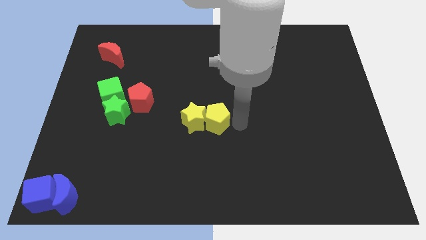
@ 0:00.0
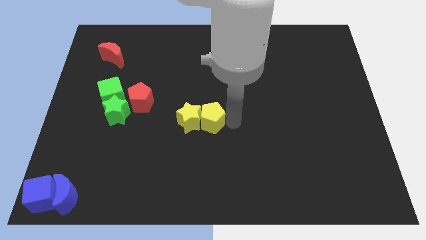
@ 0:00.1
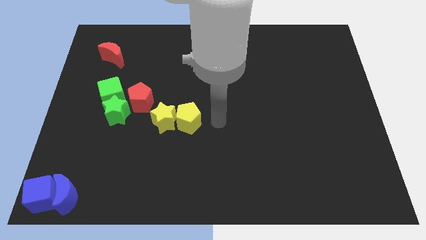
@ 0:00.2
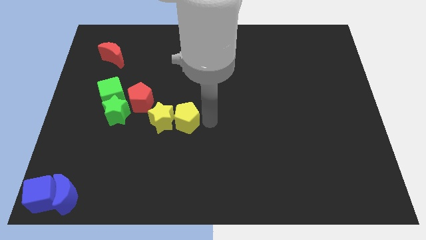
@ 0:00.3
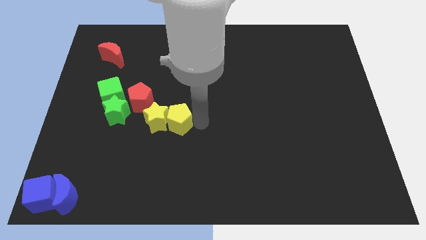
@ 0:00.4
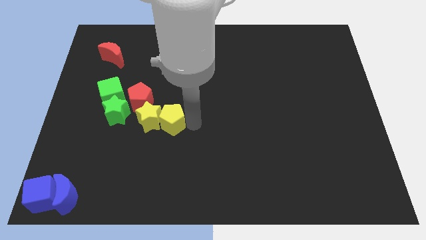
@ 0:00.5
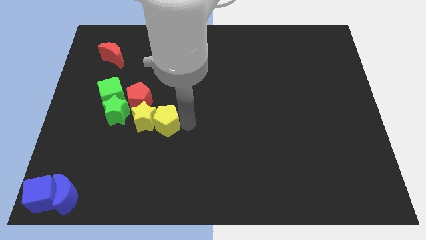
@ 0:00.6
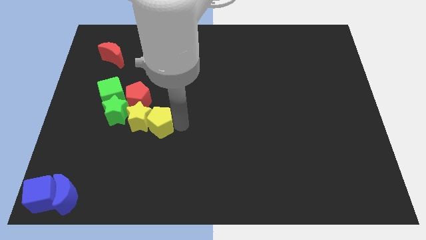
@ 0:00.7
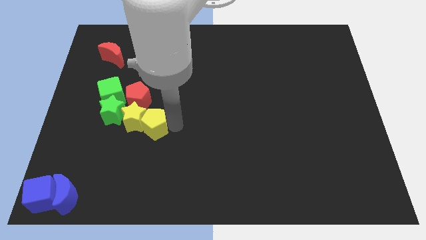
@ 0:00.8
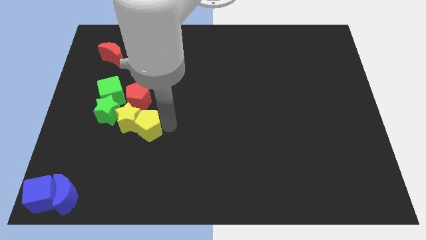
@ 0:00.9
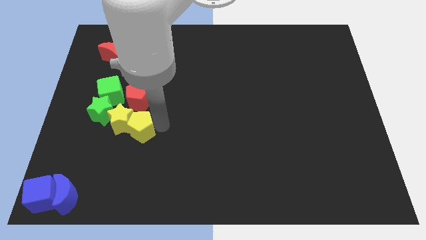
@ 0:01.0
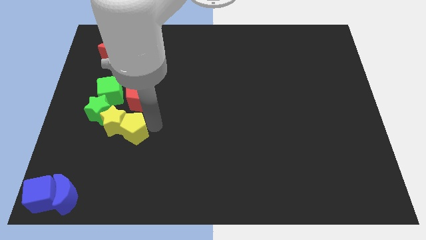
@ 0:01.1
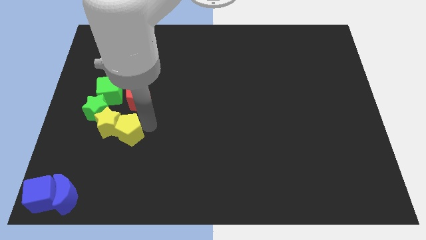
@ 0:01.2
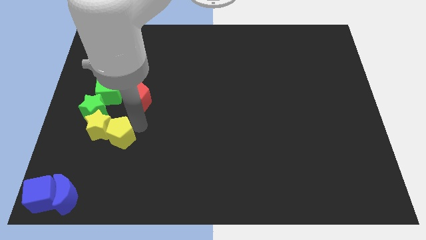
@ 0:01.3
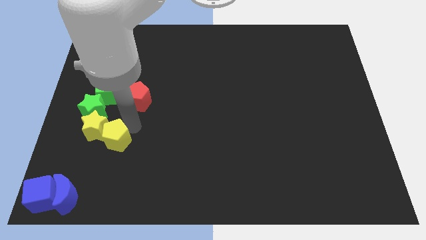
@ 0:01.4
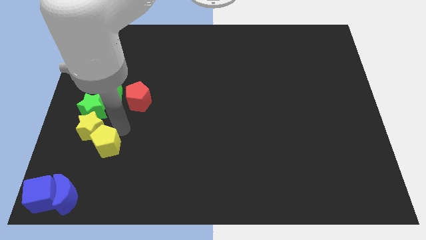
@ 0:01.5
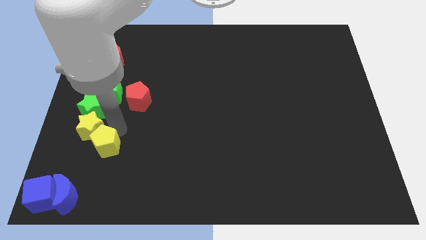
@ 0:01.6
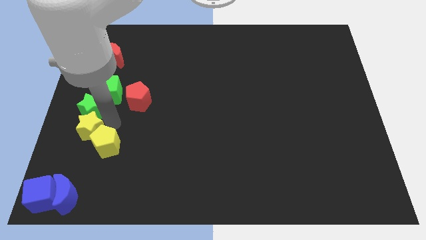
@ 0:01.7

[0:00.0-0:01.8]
slide the yellow blocks into the green star

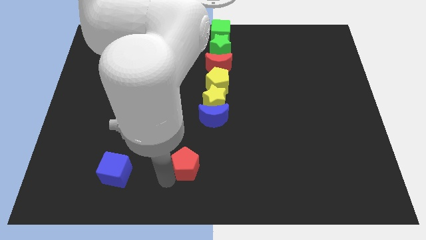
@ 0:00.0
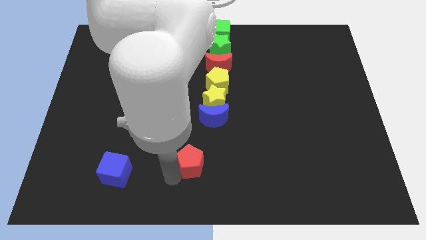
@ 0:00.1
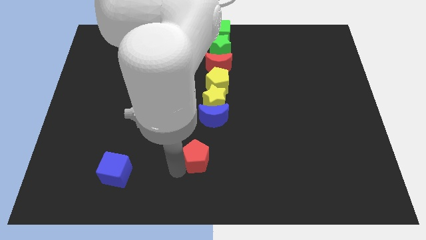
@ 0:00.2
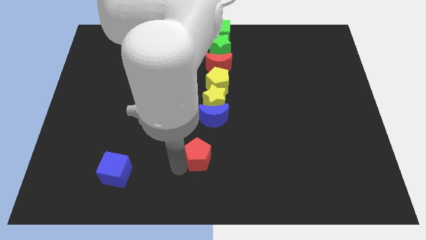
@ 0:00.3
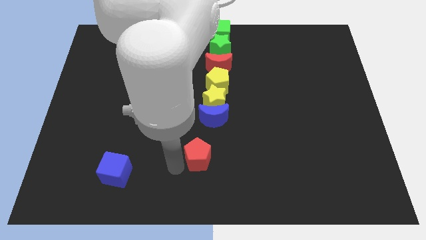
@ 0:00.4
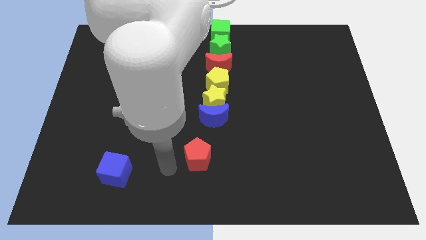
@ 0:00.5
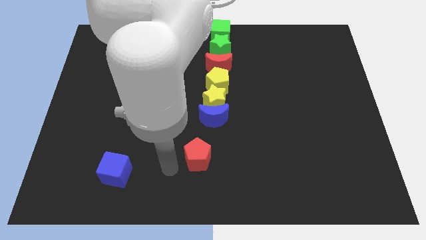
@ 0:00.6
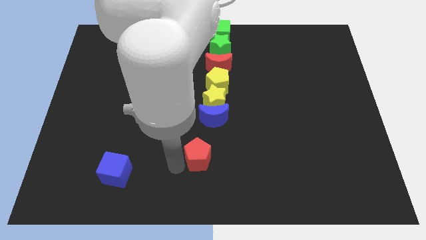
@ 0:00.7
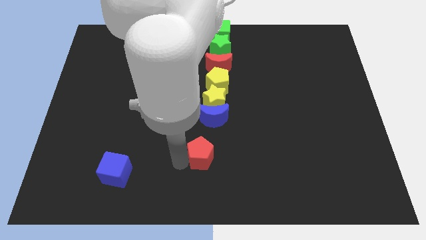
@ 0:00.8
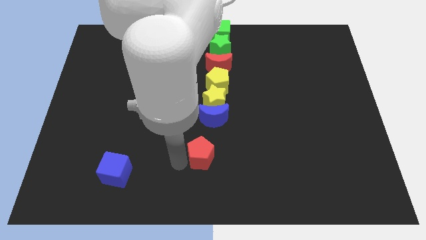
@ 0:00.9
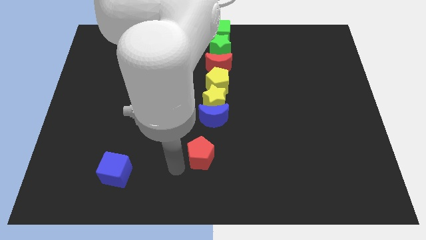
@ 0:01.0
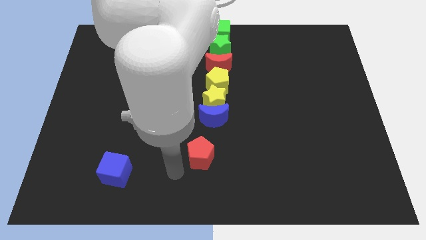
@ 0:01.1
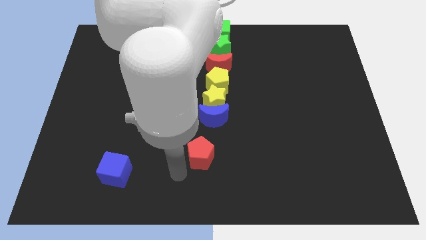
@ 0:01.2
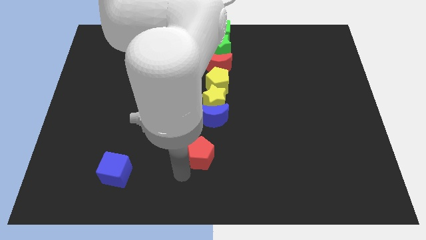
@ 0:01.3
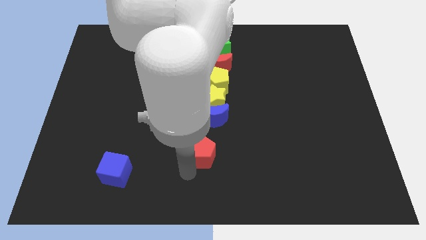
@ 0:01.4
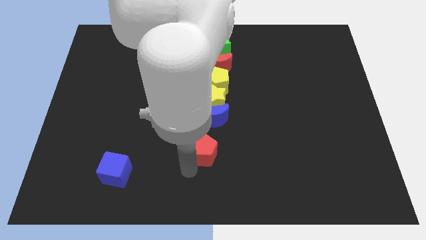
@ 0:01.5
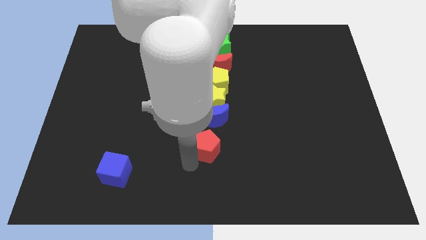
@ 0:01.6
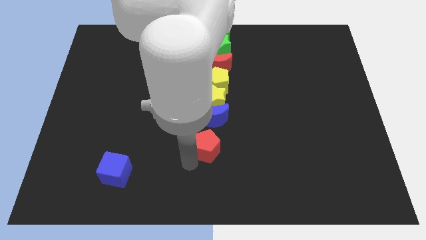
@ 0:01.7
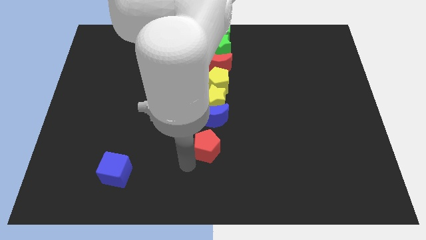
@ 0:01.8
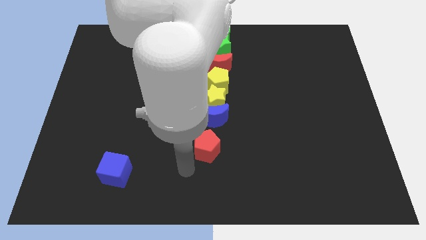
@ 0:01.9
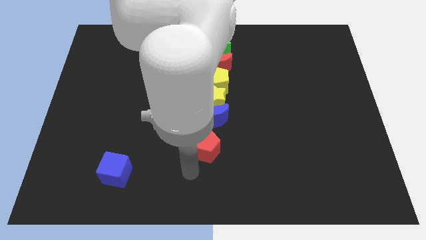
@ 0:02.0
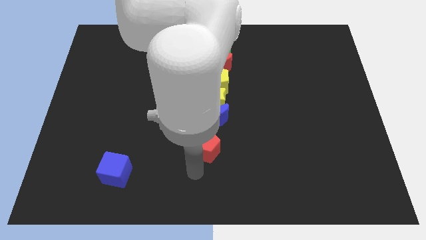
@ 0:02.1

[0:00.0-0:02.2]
move the red pentagon below the blue moon

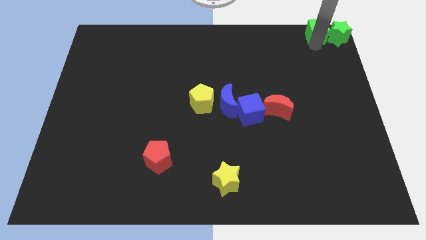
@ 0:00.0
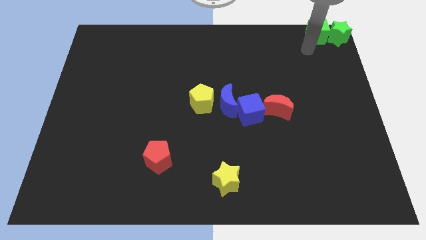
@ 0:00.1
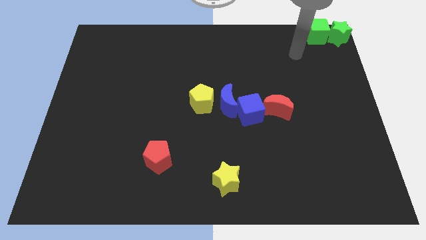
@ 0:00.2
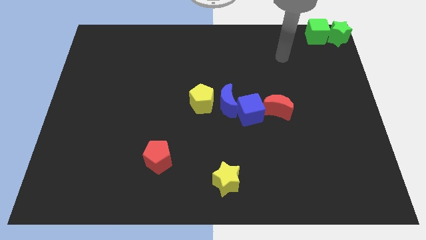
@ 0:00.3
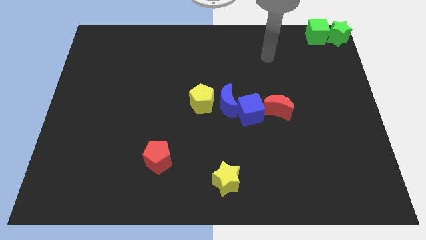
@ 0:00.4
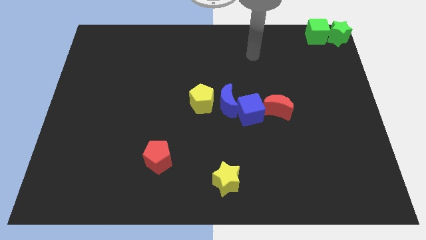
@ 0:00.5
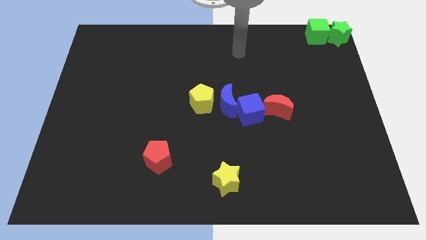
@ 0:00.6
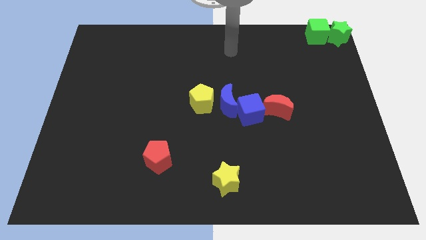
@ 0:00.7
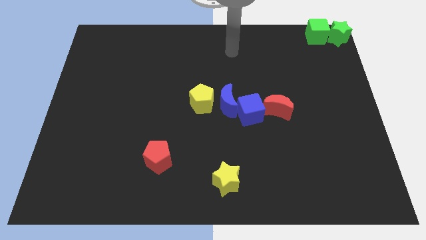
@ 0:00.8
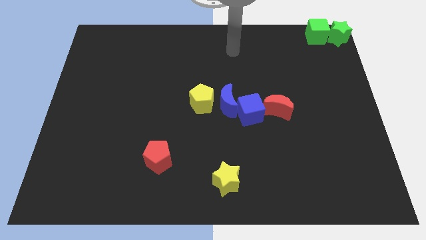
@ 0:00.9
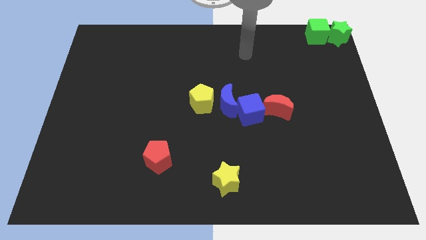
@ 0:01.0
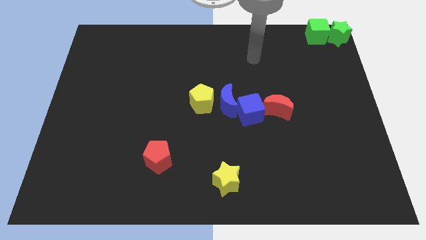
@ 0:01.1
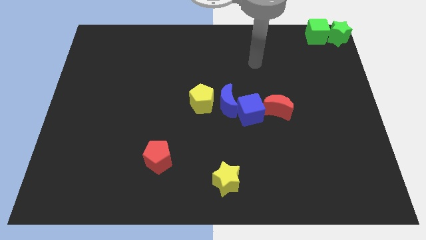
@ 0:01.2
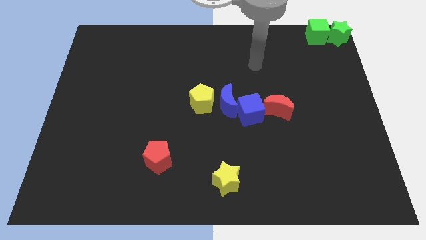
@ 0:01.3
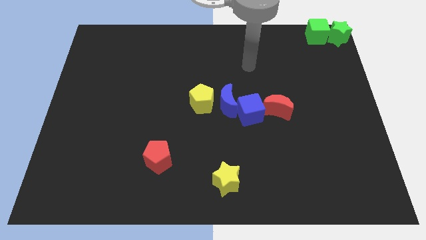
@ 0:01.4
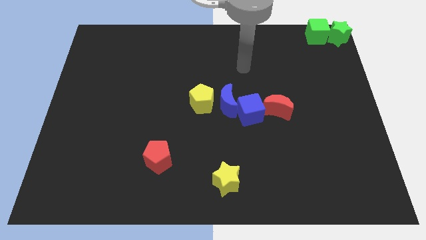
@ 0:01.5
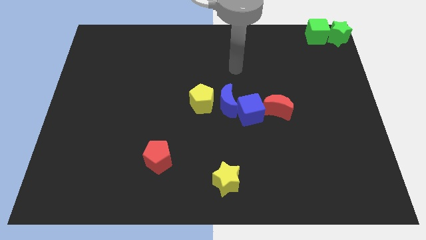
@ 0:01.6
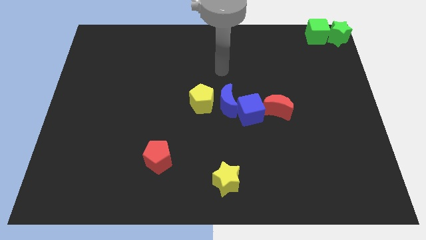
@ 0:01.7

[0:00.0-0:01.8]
move away from the green cube

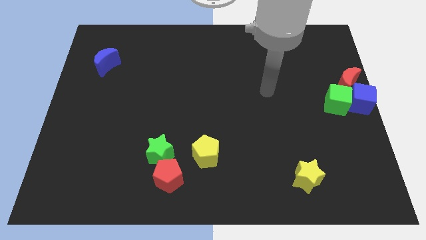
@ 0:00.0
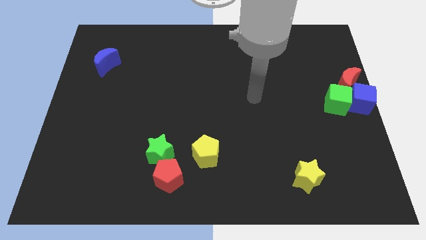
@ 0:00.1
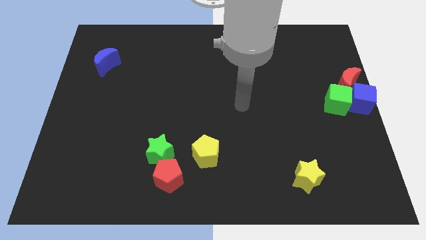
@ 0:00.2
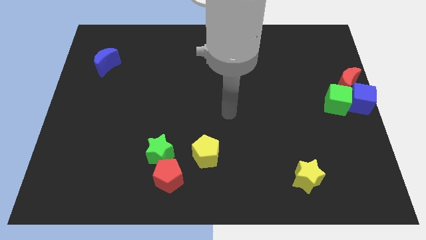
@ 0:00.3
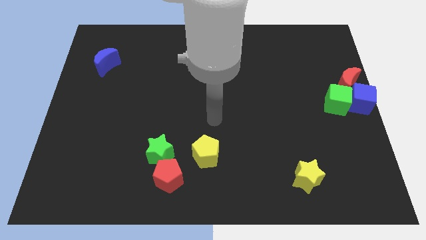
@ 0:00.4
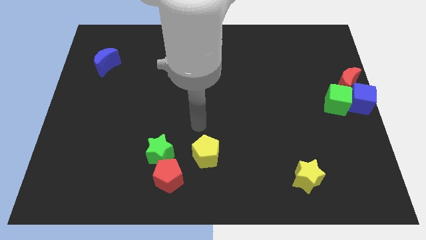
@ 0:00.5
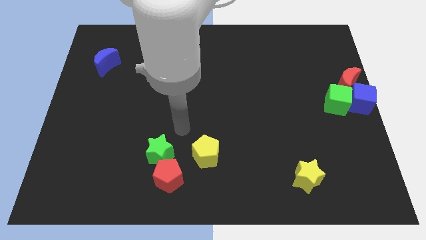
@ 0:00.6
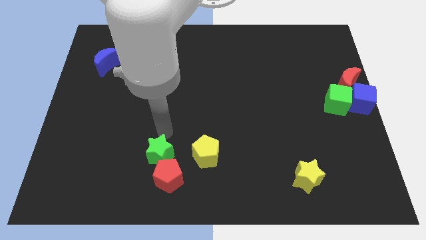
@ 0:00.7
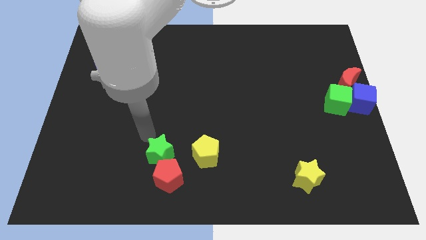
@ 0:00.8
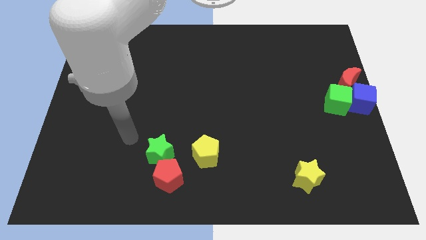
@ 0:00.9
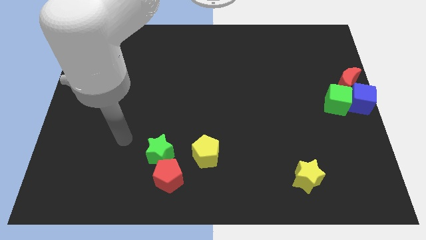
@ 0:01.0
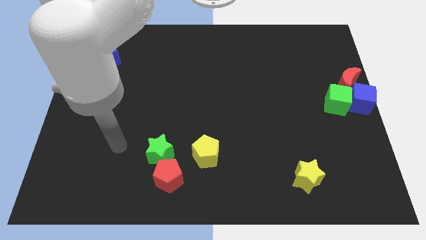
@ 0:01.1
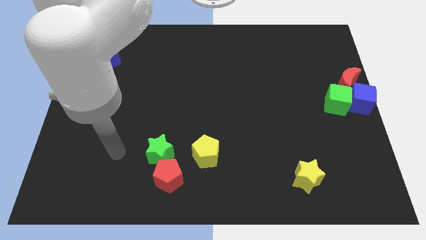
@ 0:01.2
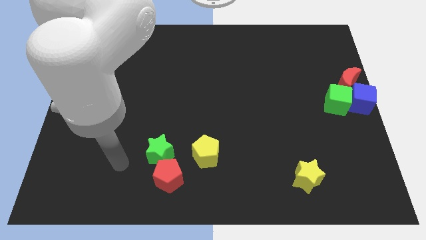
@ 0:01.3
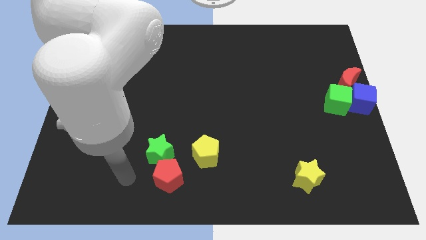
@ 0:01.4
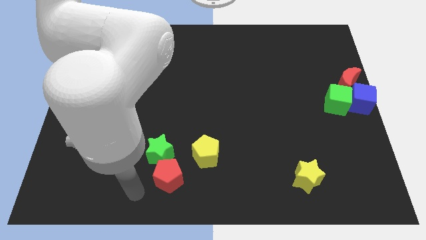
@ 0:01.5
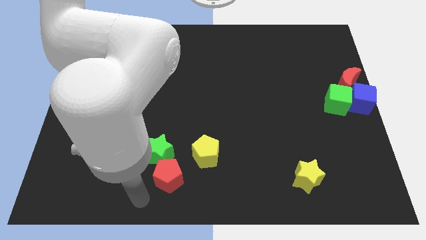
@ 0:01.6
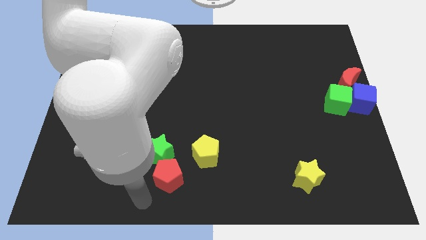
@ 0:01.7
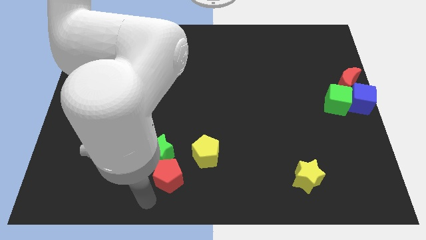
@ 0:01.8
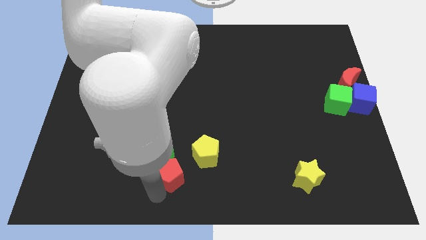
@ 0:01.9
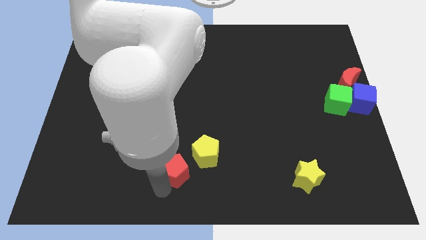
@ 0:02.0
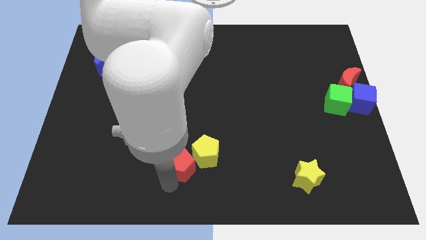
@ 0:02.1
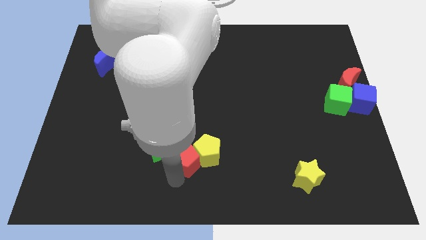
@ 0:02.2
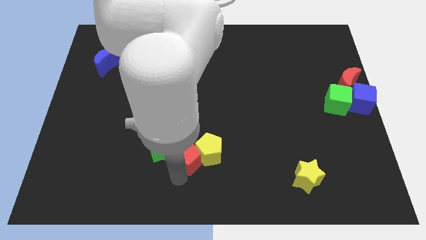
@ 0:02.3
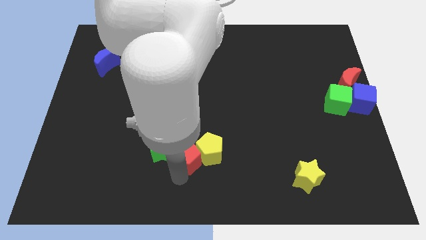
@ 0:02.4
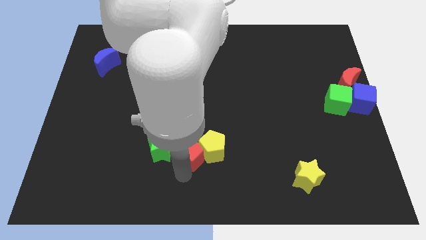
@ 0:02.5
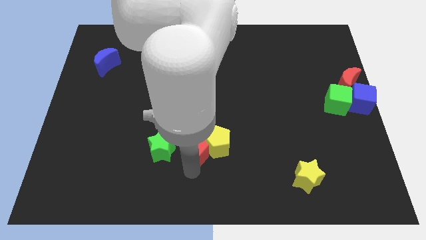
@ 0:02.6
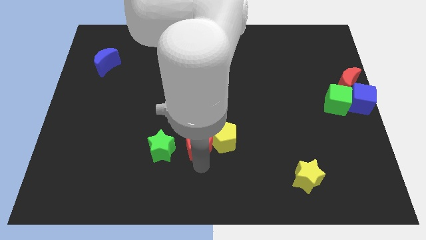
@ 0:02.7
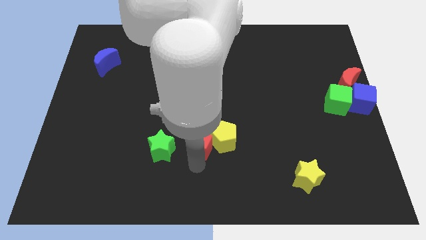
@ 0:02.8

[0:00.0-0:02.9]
push red pentagon in to yellow pentagon
